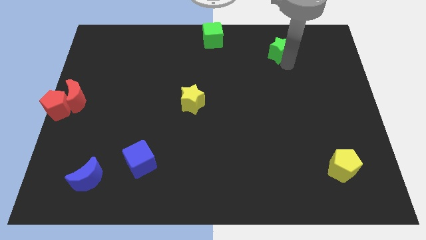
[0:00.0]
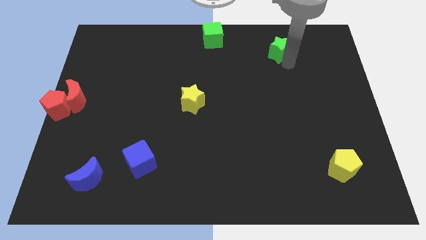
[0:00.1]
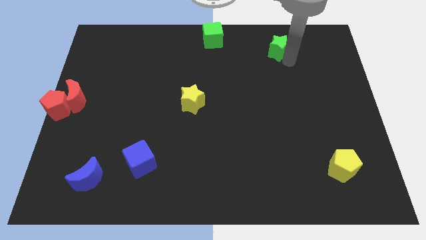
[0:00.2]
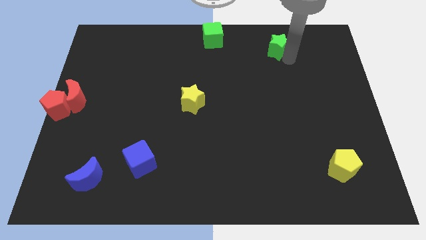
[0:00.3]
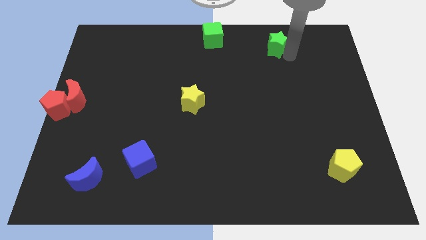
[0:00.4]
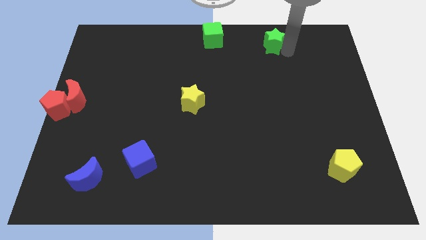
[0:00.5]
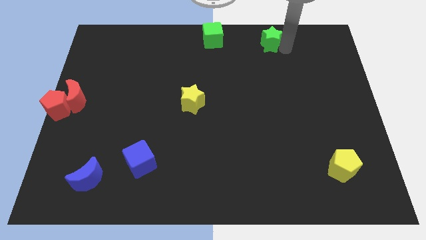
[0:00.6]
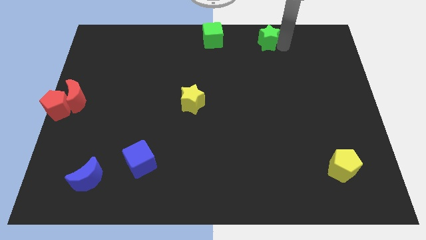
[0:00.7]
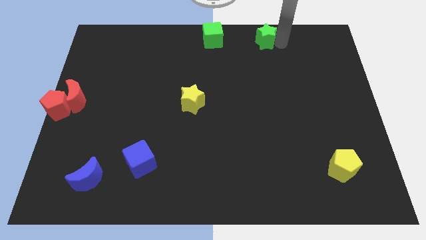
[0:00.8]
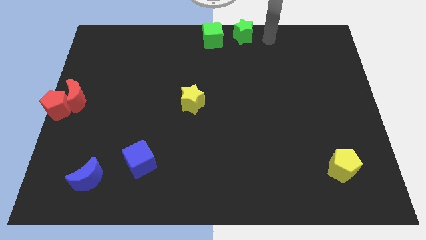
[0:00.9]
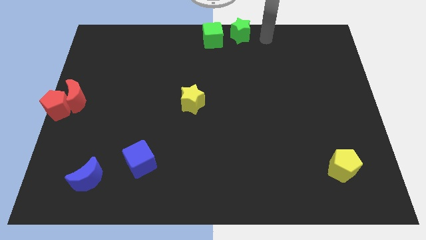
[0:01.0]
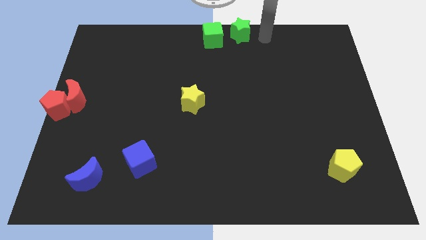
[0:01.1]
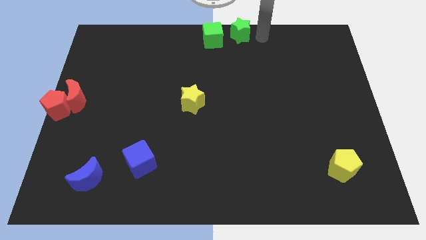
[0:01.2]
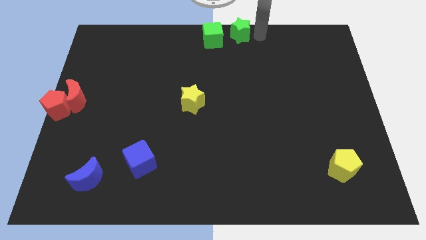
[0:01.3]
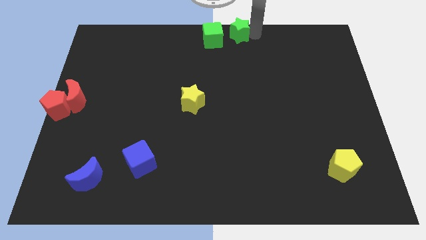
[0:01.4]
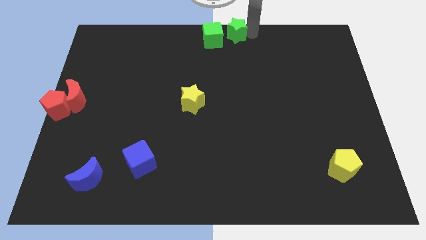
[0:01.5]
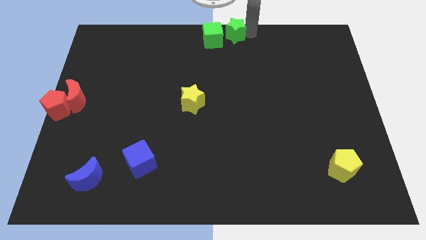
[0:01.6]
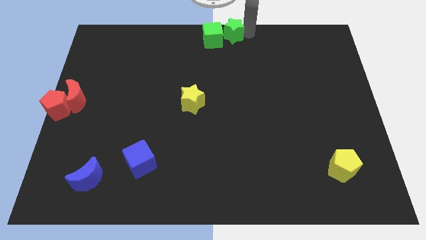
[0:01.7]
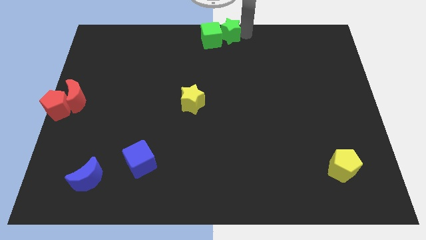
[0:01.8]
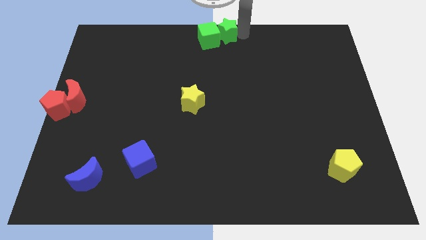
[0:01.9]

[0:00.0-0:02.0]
place the green star right to the green cube

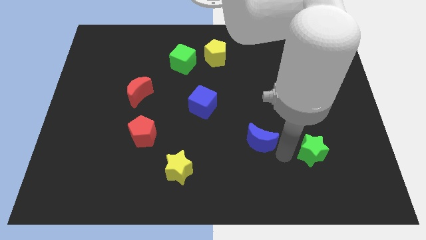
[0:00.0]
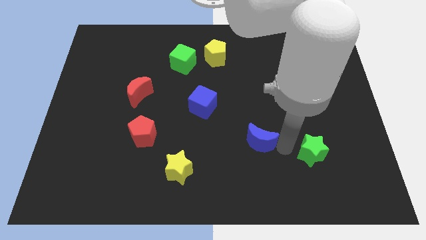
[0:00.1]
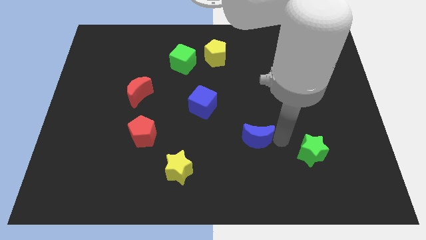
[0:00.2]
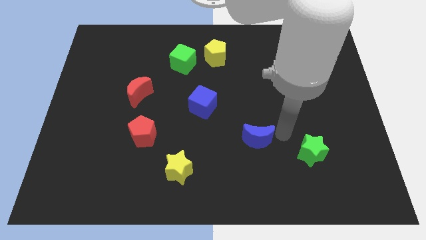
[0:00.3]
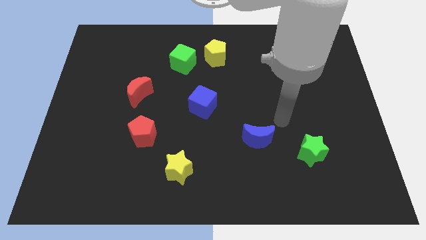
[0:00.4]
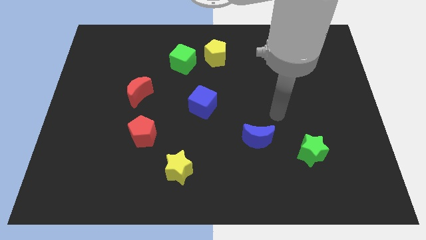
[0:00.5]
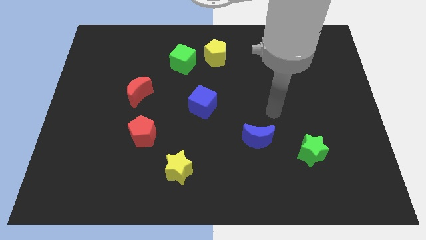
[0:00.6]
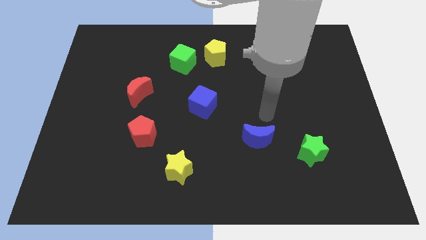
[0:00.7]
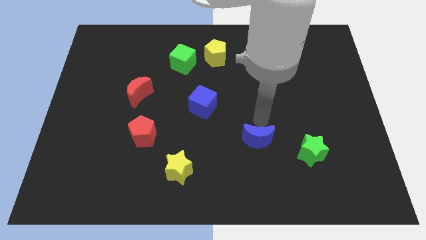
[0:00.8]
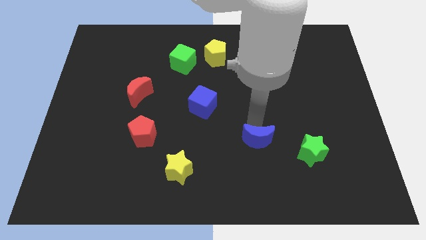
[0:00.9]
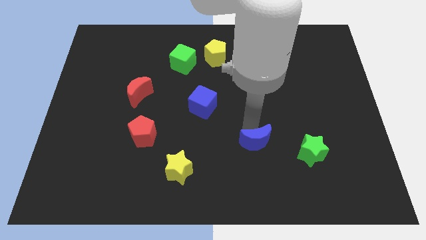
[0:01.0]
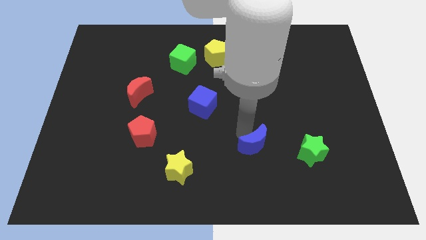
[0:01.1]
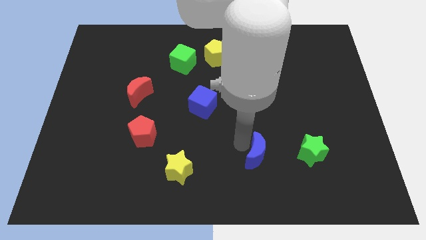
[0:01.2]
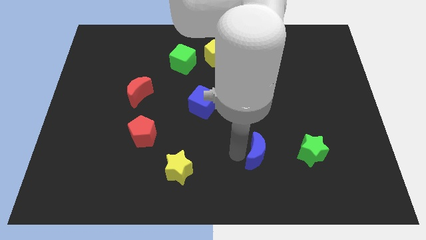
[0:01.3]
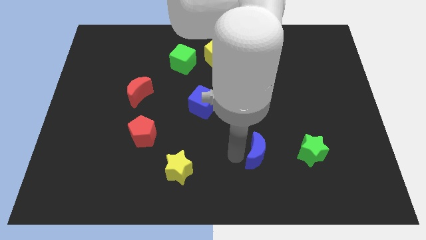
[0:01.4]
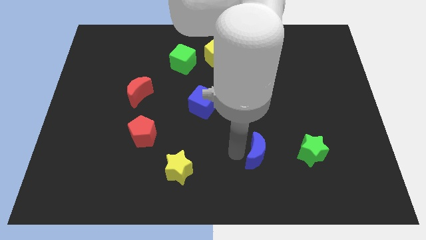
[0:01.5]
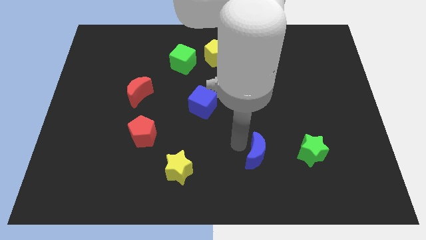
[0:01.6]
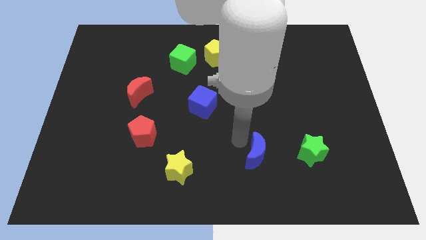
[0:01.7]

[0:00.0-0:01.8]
push the blue crescent towards the blue cube

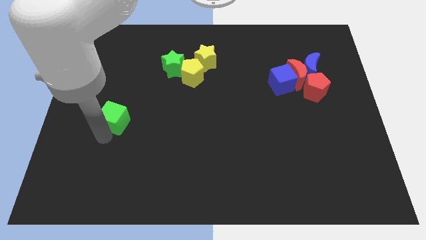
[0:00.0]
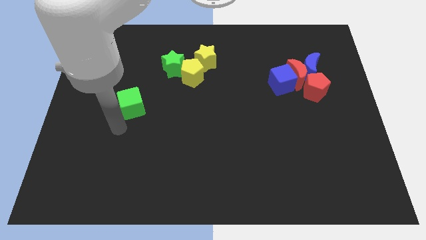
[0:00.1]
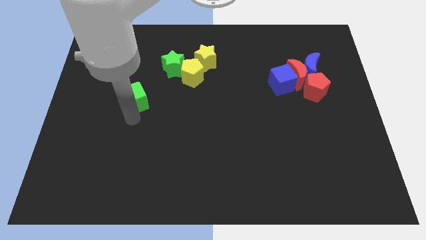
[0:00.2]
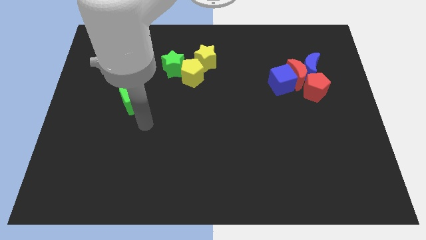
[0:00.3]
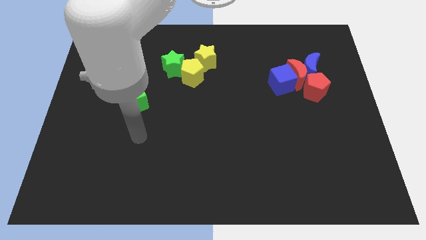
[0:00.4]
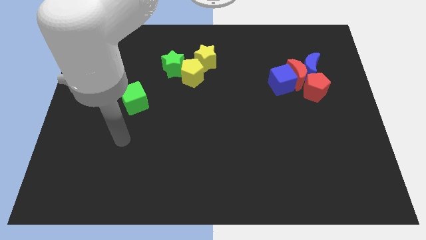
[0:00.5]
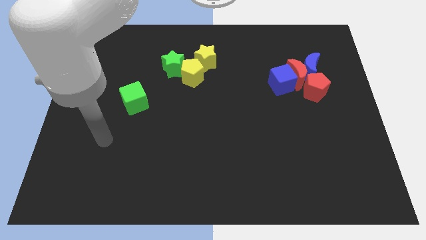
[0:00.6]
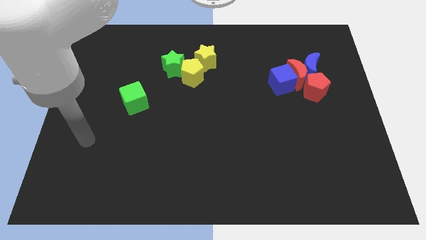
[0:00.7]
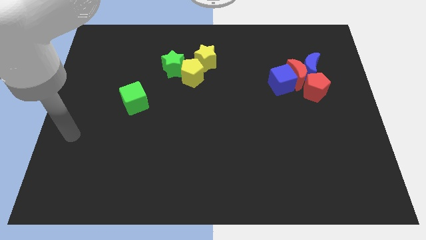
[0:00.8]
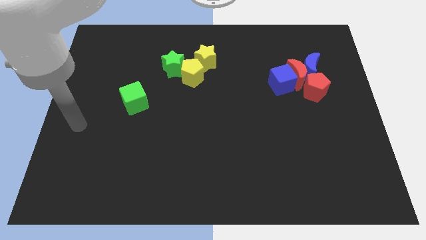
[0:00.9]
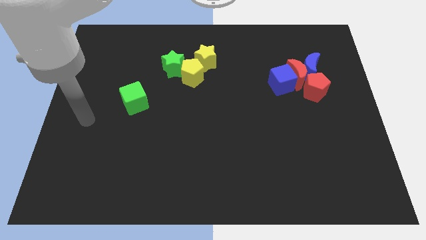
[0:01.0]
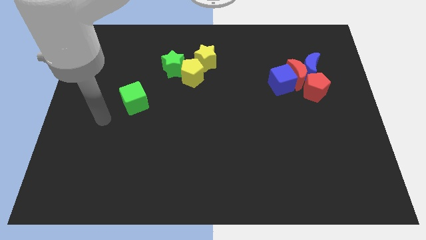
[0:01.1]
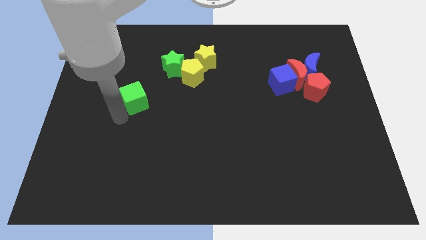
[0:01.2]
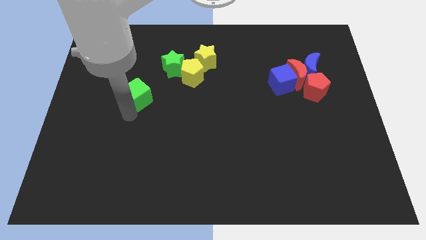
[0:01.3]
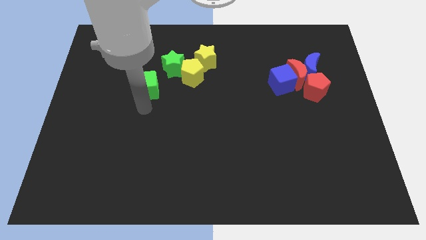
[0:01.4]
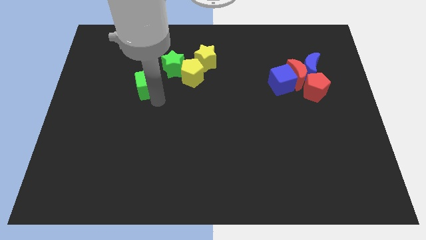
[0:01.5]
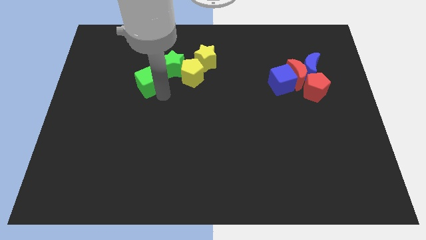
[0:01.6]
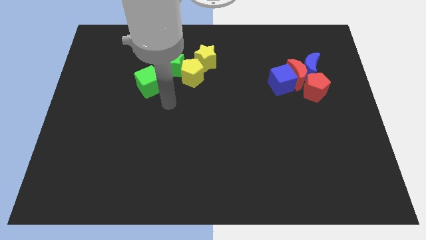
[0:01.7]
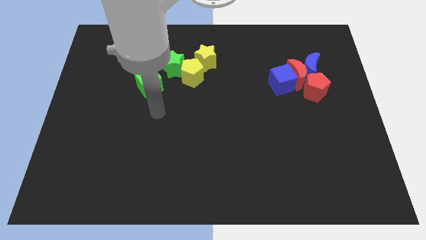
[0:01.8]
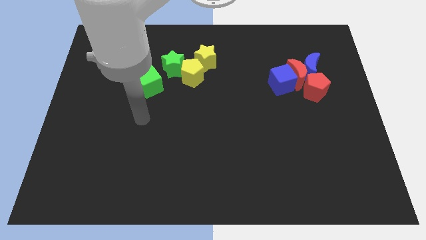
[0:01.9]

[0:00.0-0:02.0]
push the green cube below the green star diagonally

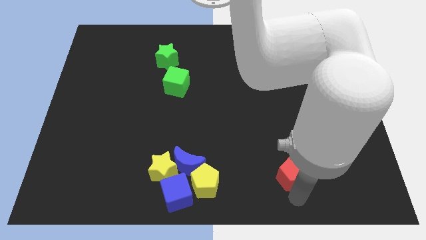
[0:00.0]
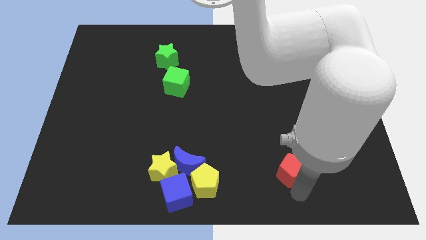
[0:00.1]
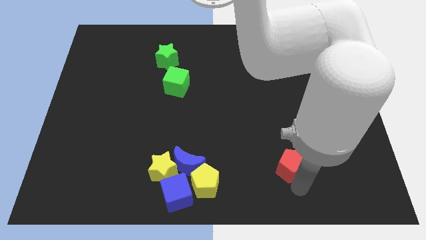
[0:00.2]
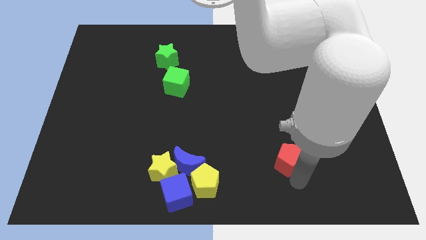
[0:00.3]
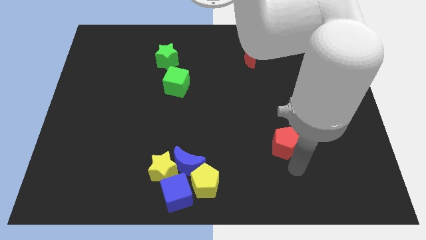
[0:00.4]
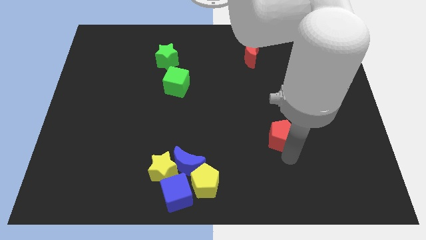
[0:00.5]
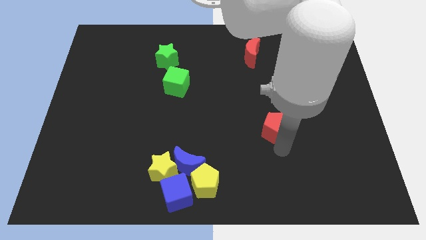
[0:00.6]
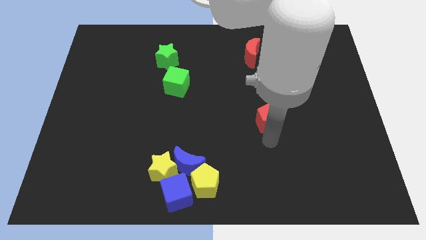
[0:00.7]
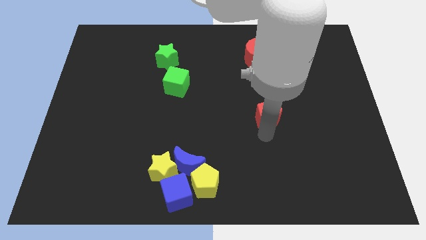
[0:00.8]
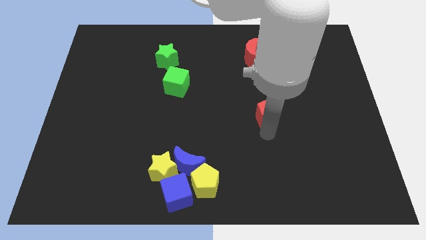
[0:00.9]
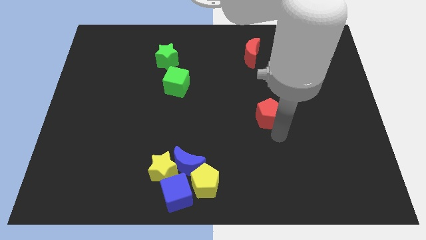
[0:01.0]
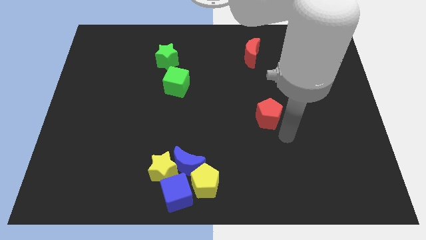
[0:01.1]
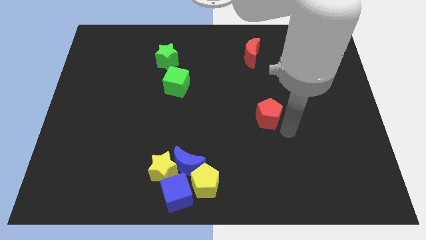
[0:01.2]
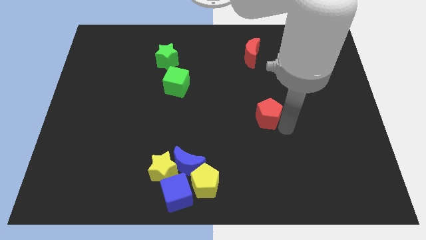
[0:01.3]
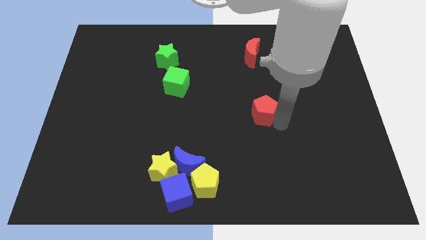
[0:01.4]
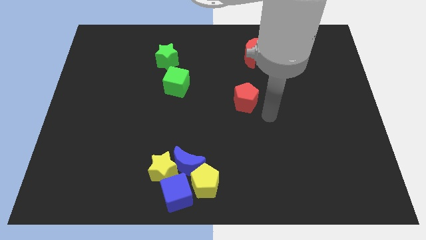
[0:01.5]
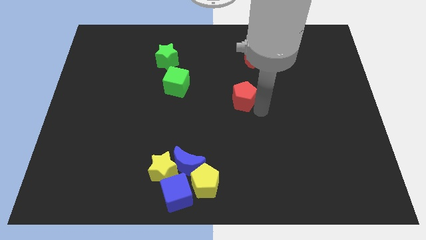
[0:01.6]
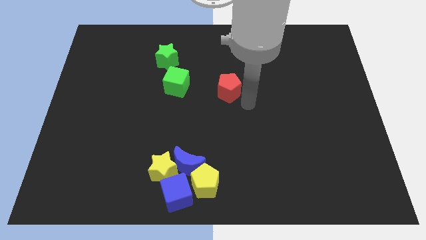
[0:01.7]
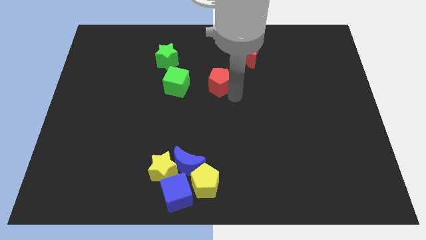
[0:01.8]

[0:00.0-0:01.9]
place the red pentagon to right side of the green cube

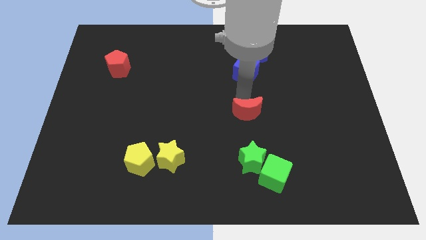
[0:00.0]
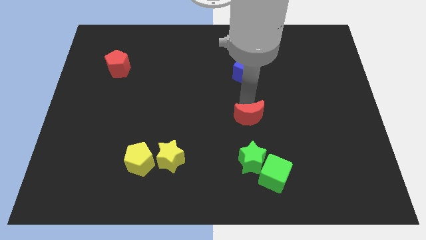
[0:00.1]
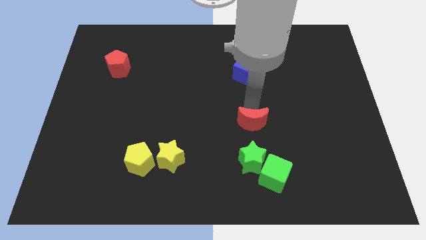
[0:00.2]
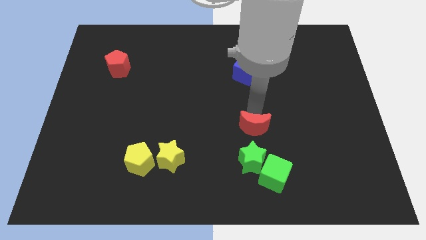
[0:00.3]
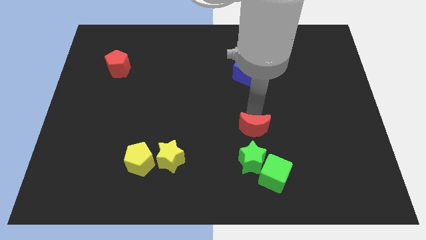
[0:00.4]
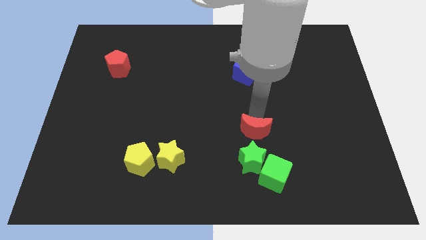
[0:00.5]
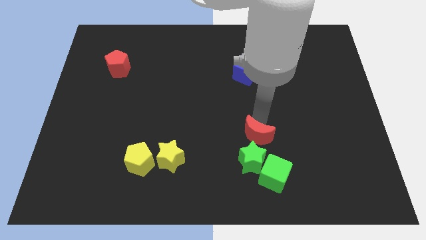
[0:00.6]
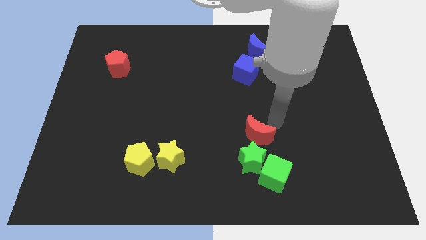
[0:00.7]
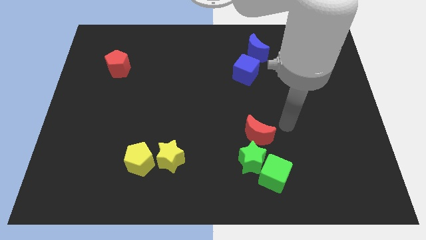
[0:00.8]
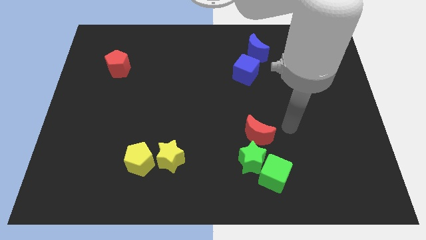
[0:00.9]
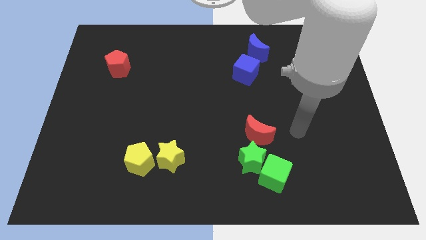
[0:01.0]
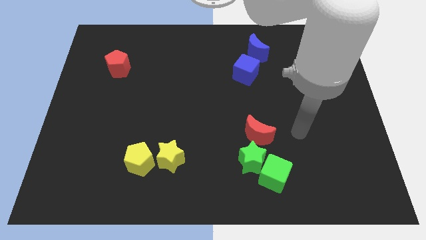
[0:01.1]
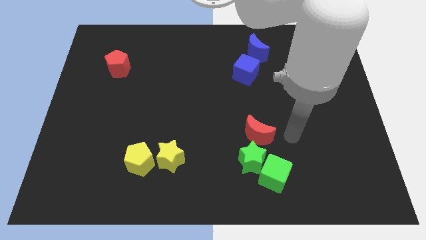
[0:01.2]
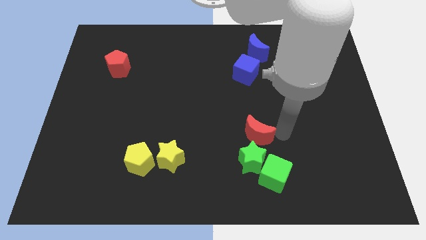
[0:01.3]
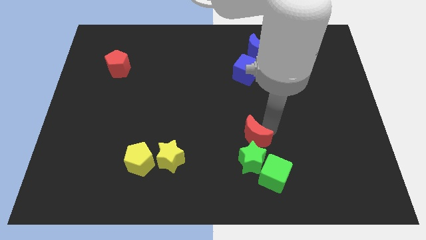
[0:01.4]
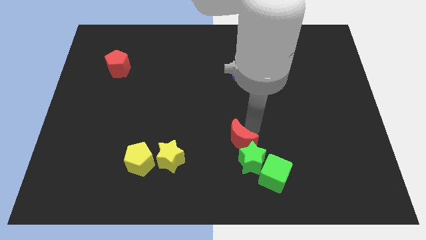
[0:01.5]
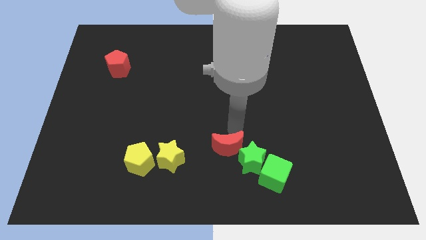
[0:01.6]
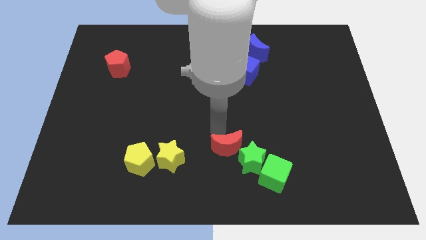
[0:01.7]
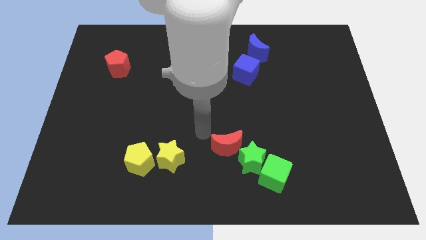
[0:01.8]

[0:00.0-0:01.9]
push the red crescent to the top left of green star
